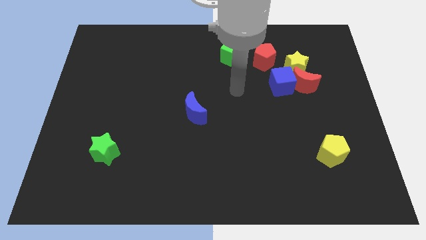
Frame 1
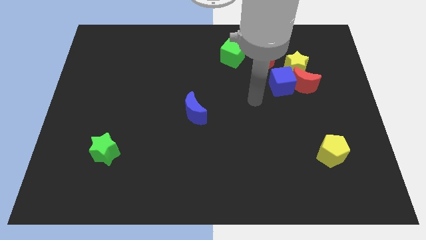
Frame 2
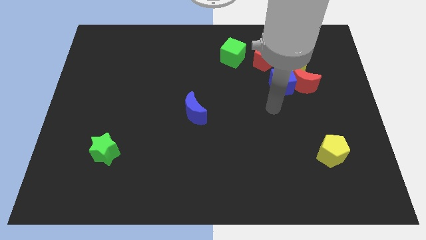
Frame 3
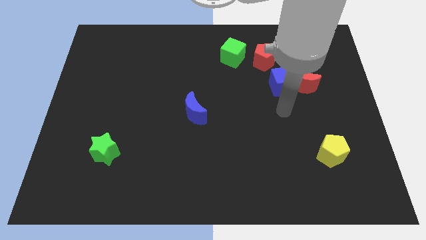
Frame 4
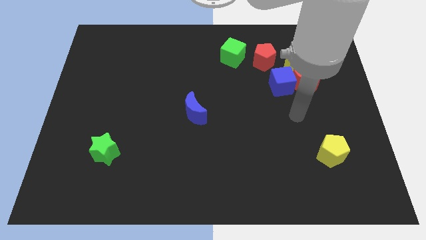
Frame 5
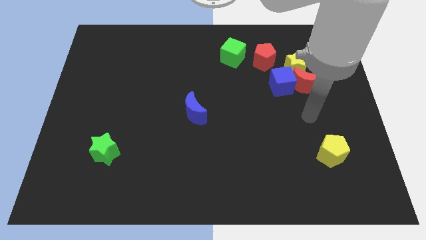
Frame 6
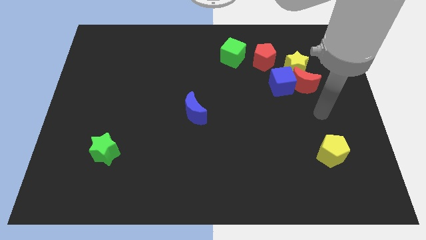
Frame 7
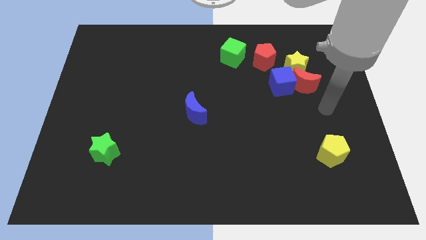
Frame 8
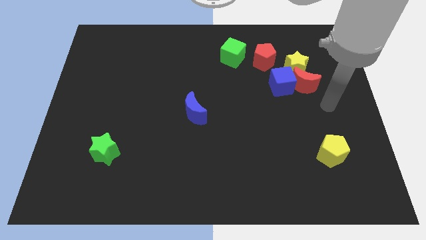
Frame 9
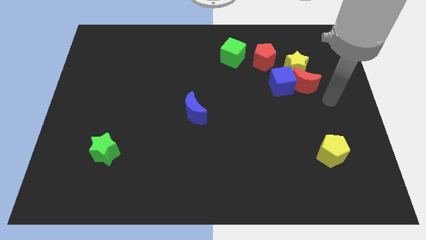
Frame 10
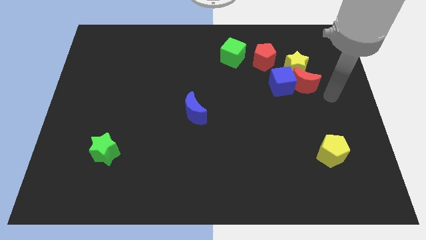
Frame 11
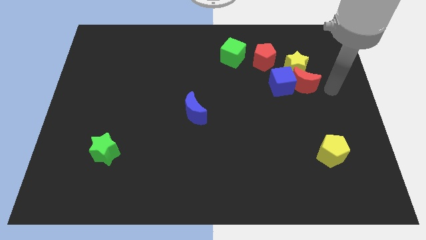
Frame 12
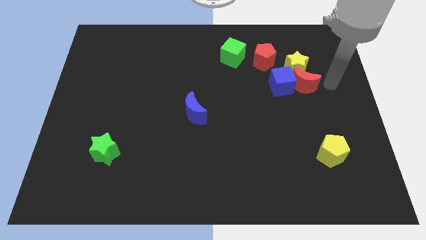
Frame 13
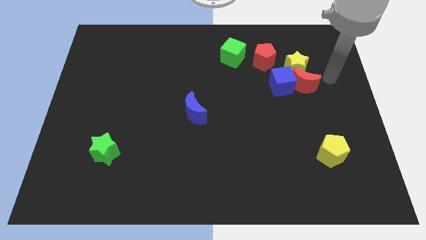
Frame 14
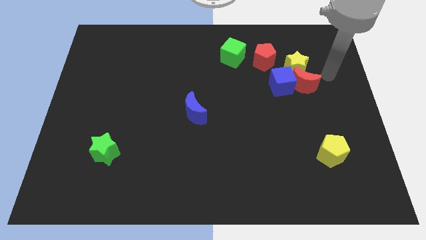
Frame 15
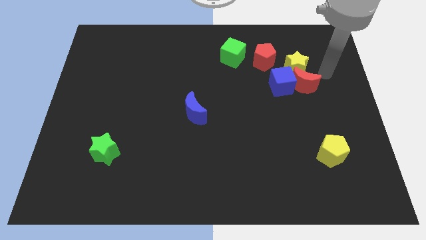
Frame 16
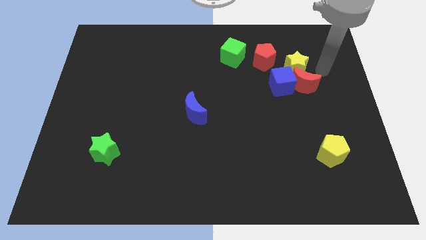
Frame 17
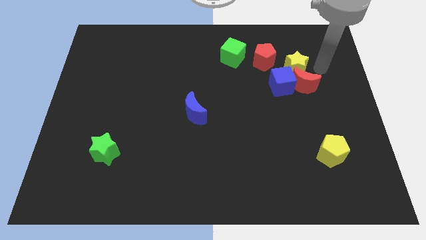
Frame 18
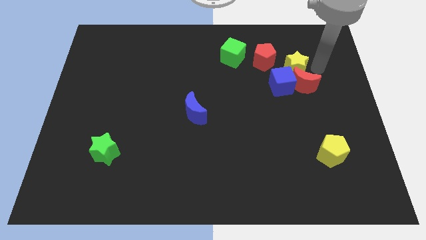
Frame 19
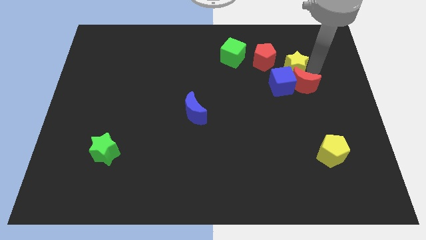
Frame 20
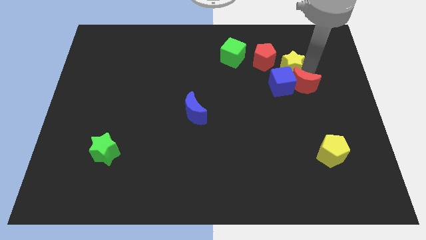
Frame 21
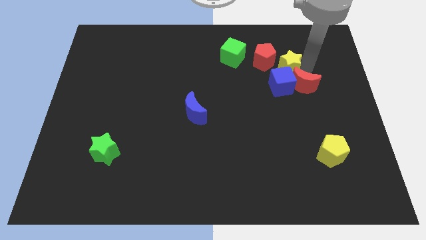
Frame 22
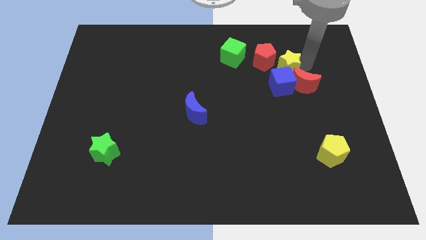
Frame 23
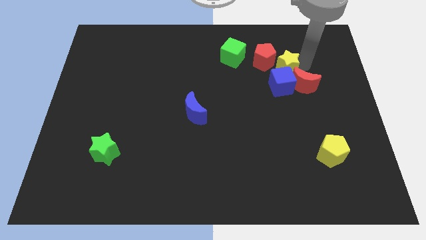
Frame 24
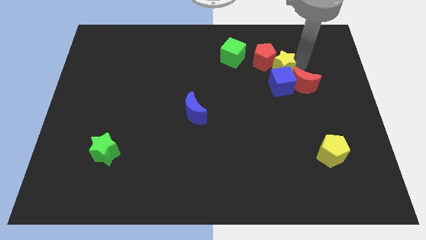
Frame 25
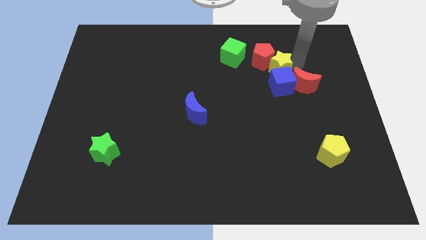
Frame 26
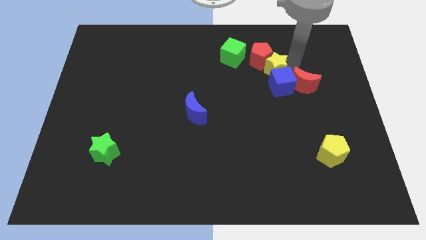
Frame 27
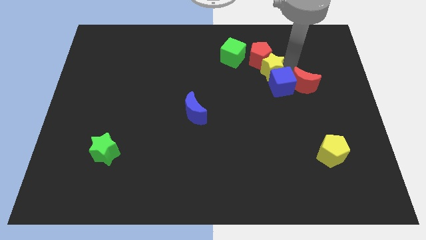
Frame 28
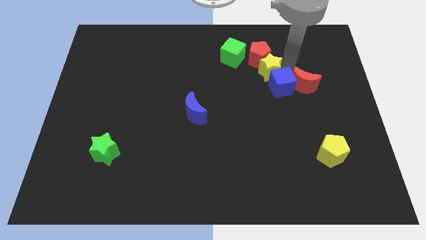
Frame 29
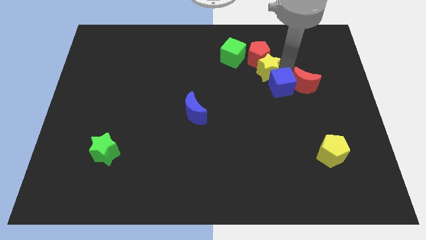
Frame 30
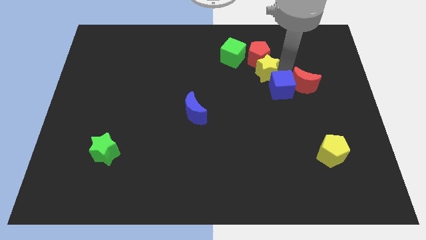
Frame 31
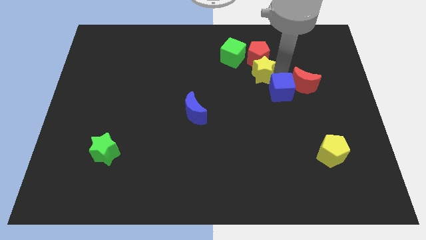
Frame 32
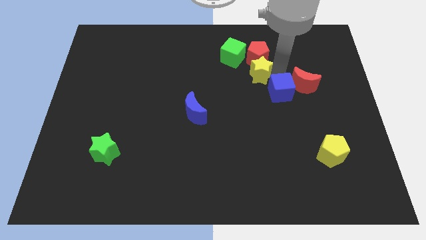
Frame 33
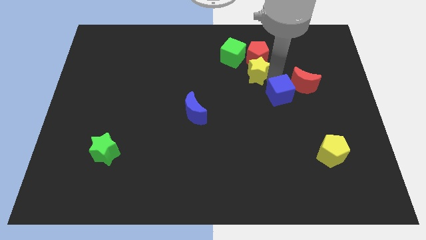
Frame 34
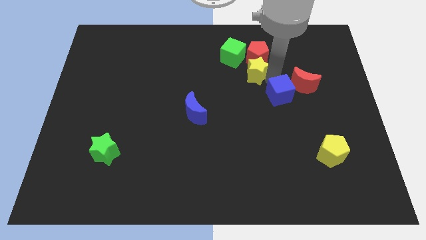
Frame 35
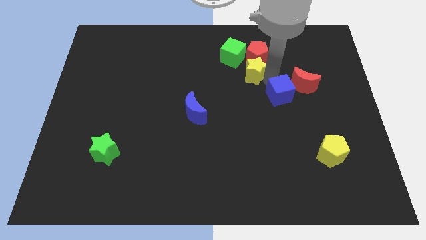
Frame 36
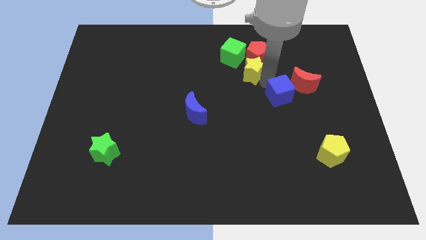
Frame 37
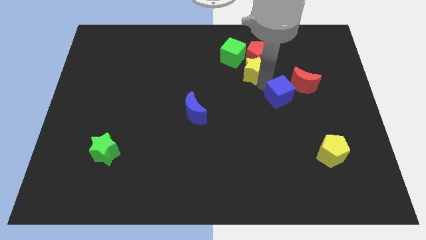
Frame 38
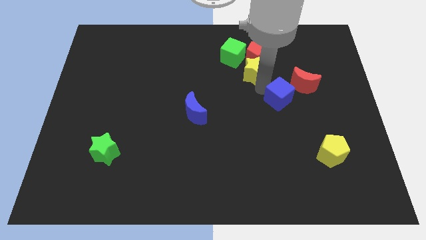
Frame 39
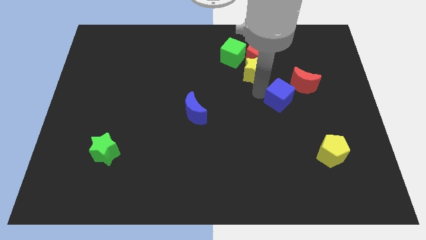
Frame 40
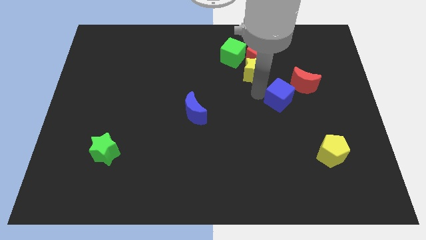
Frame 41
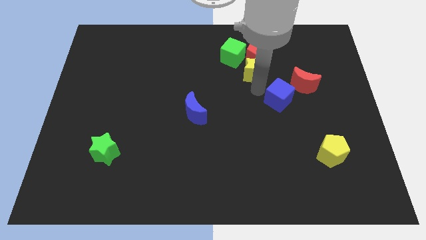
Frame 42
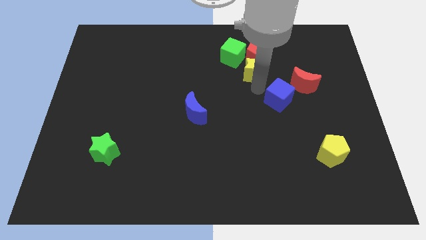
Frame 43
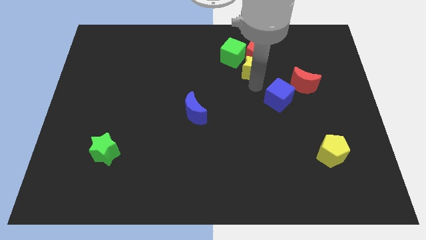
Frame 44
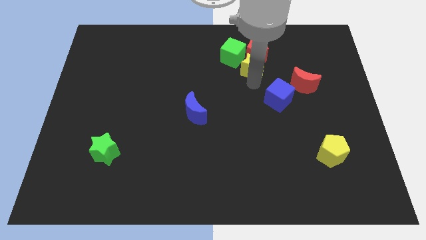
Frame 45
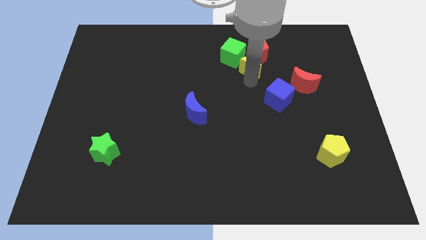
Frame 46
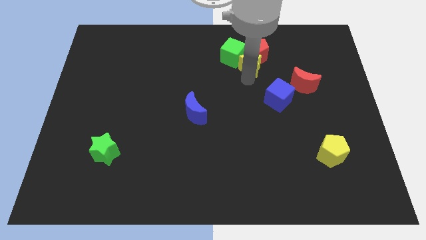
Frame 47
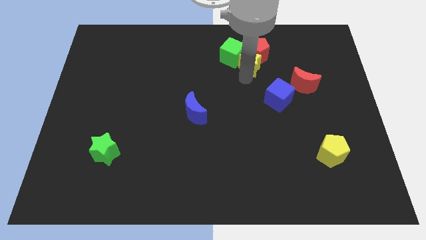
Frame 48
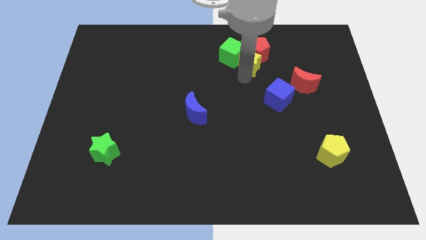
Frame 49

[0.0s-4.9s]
move the yellow star close to the green cube

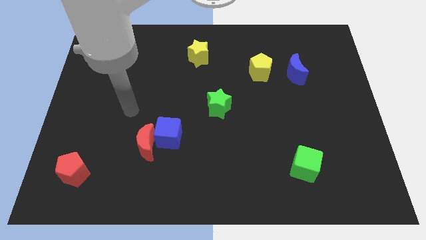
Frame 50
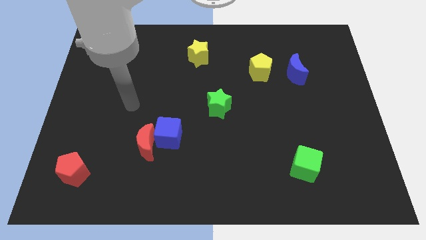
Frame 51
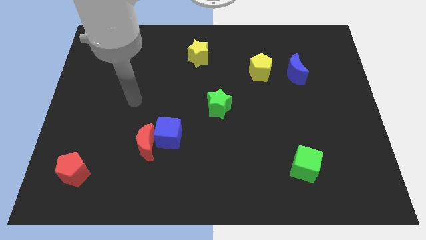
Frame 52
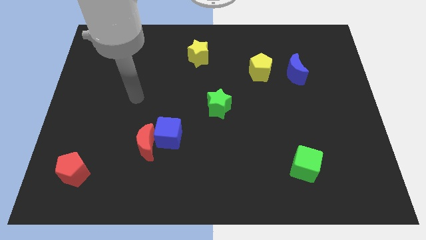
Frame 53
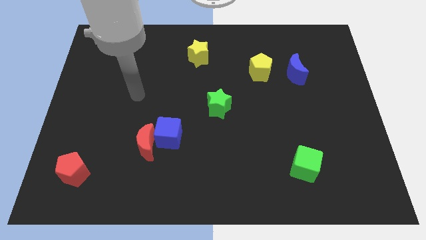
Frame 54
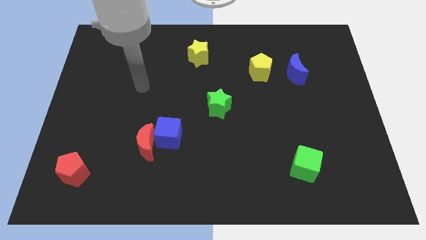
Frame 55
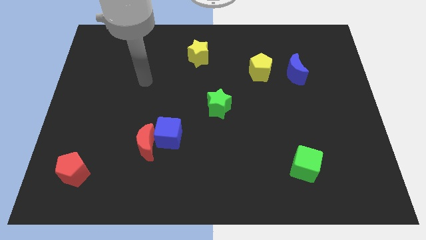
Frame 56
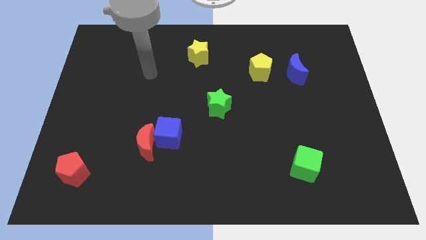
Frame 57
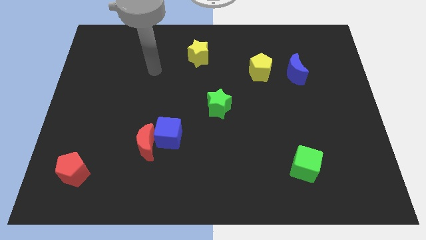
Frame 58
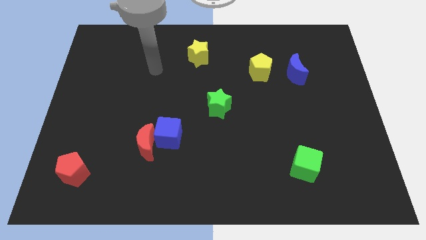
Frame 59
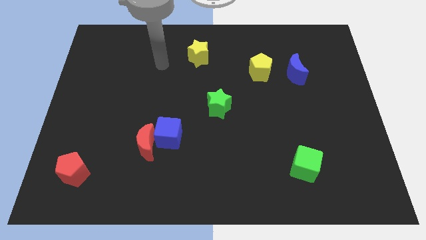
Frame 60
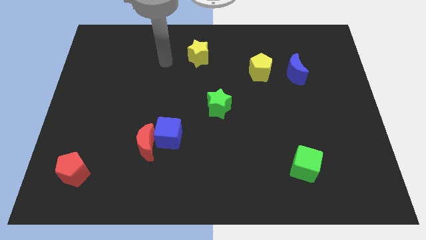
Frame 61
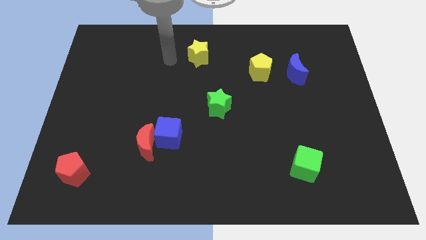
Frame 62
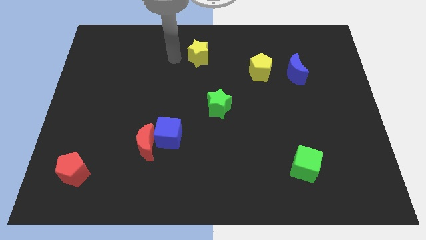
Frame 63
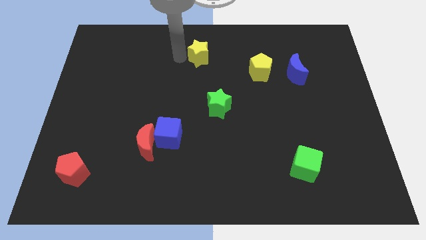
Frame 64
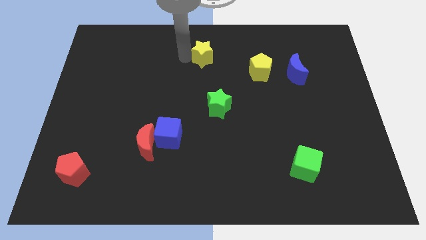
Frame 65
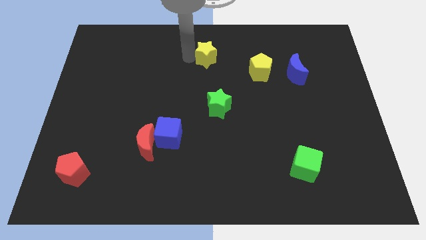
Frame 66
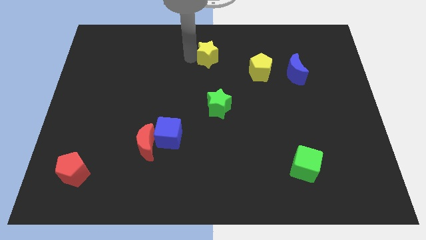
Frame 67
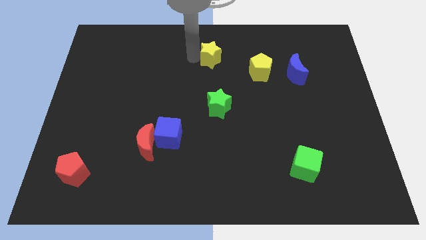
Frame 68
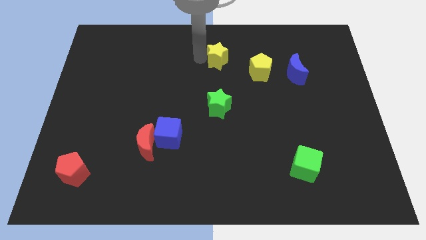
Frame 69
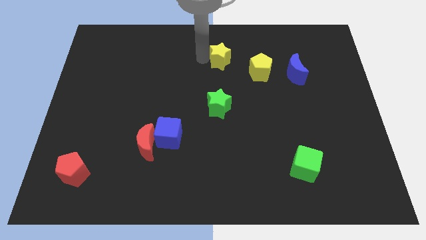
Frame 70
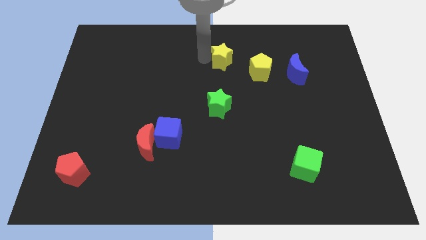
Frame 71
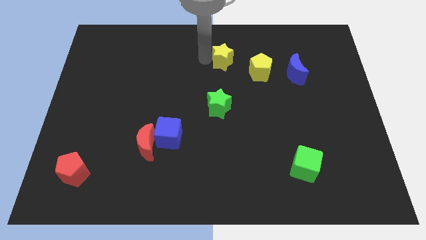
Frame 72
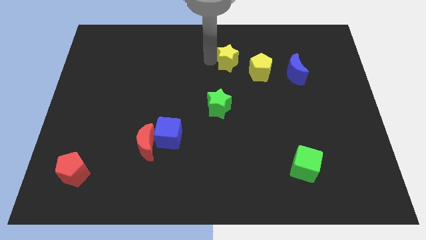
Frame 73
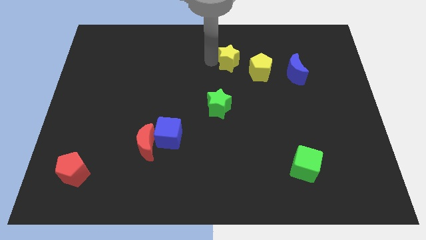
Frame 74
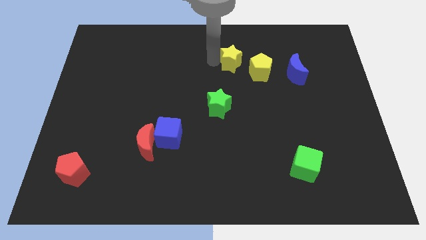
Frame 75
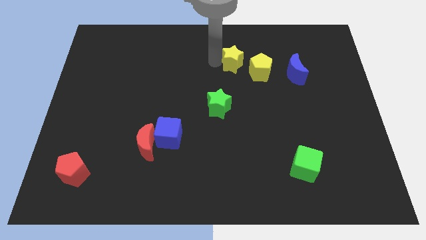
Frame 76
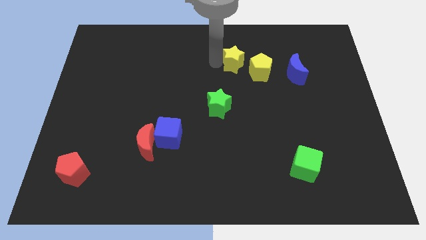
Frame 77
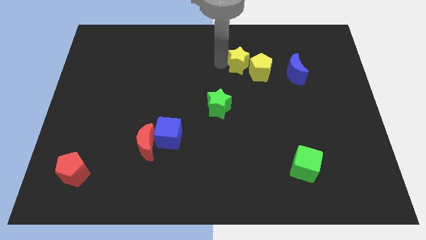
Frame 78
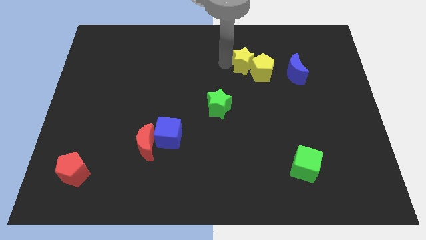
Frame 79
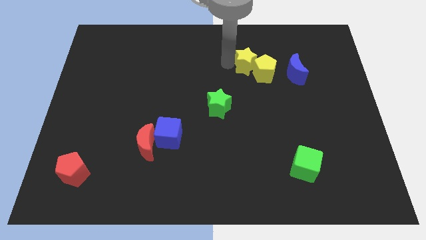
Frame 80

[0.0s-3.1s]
push the yellow star next to the yellow pentagon
